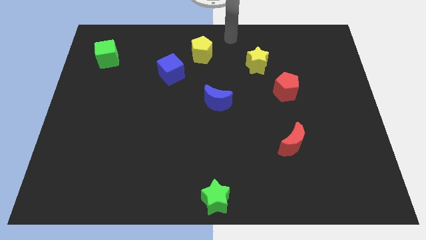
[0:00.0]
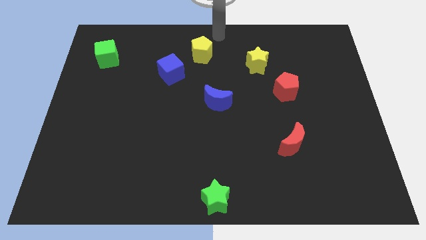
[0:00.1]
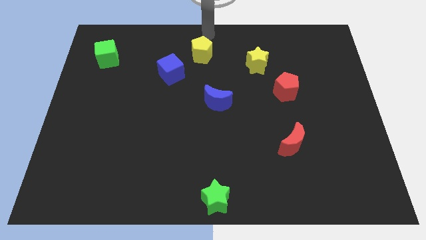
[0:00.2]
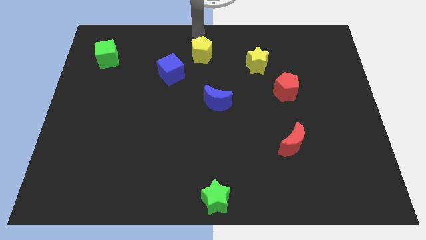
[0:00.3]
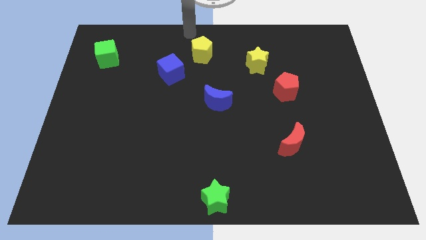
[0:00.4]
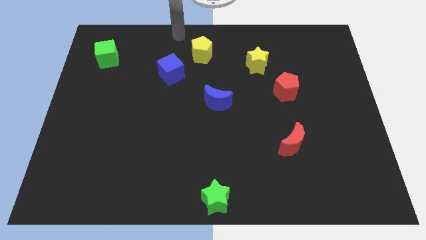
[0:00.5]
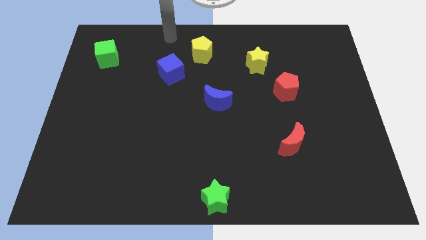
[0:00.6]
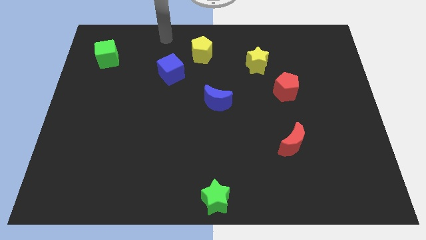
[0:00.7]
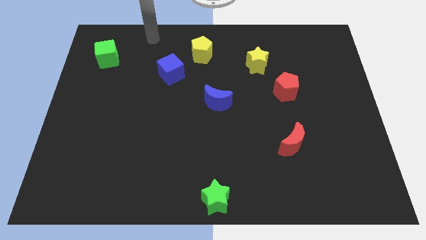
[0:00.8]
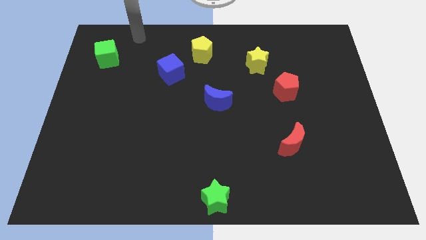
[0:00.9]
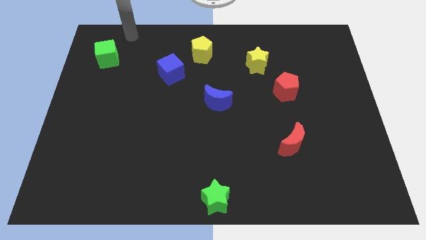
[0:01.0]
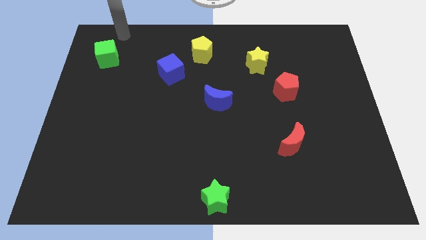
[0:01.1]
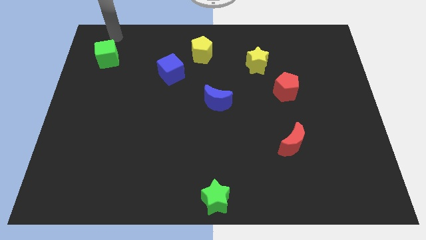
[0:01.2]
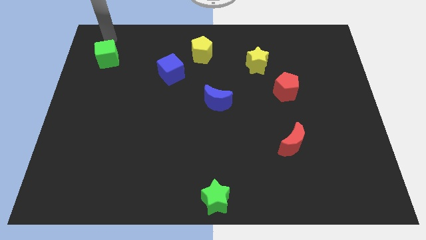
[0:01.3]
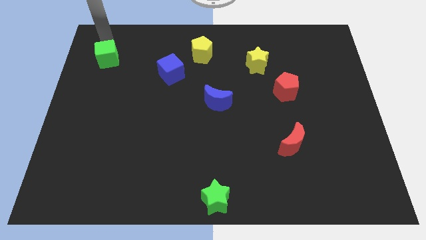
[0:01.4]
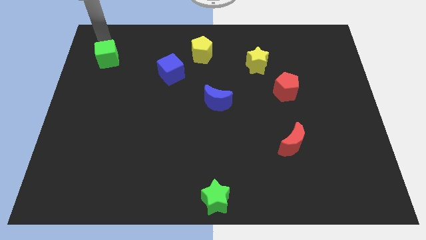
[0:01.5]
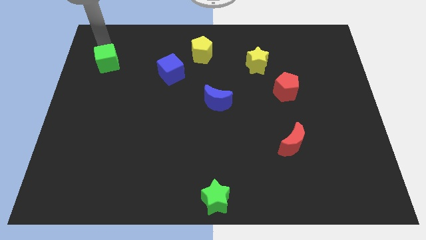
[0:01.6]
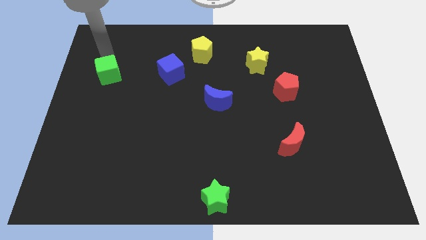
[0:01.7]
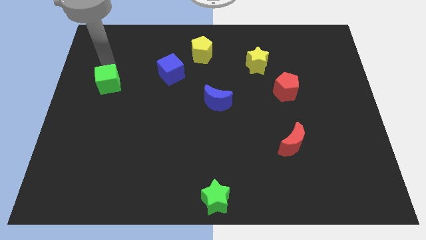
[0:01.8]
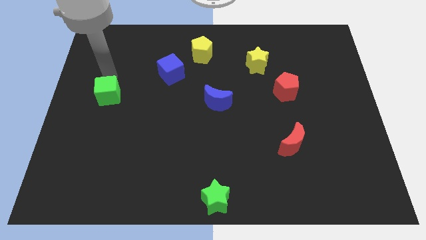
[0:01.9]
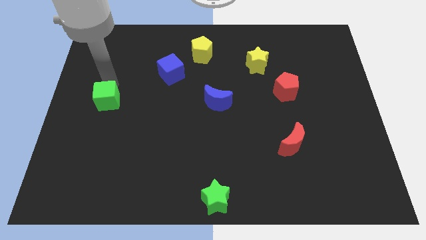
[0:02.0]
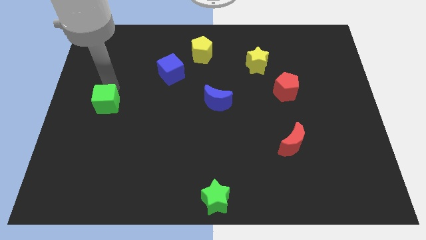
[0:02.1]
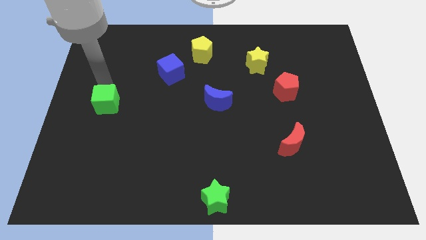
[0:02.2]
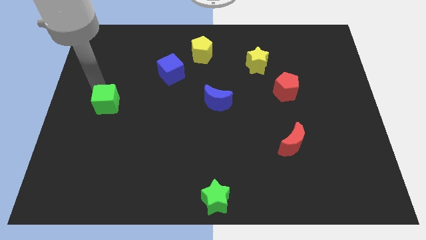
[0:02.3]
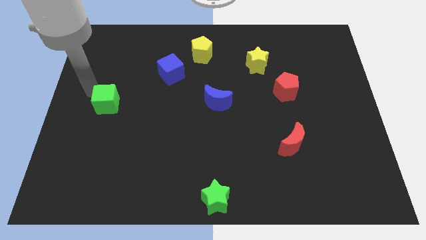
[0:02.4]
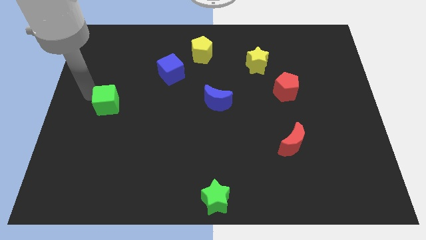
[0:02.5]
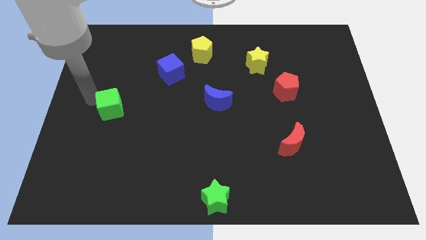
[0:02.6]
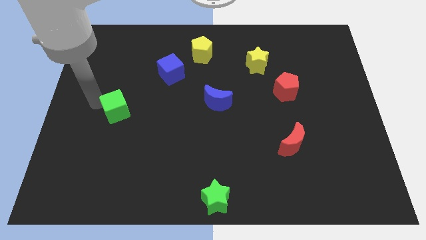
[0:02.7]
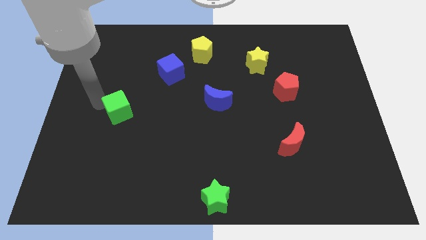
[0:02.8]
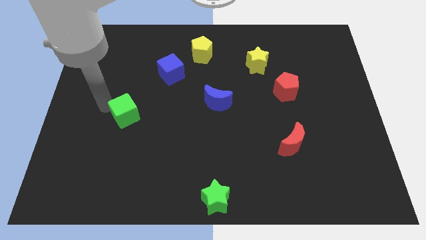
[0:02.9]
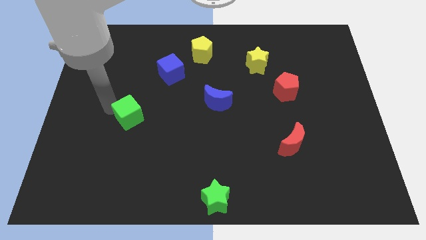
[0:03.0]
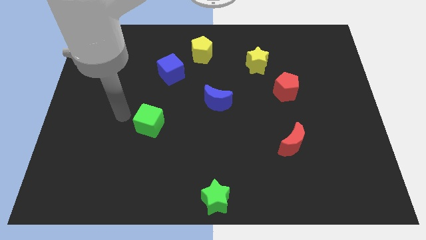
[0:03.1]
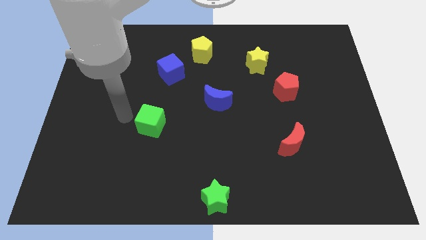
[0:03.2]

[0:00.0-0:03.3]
place the green cube diagonally to the bottom centre of the green star

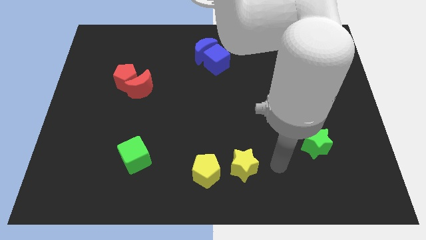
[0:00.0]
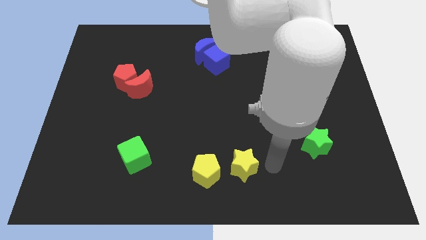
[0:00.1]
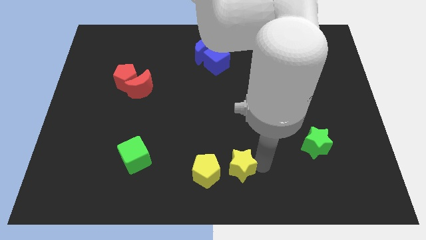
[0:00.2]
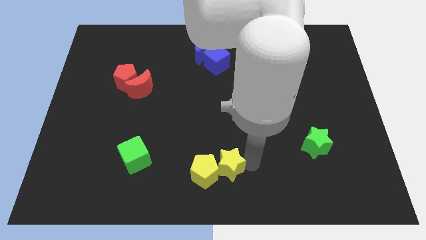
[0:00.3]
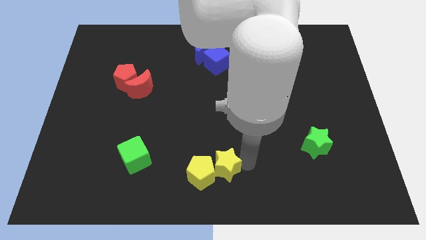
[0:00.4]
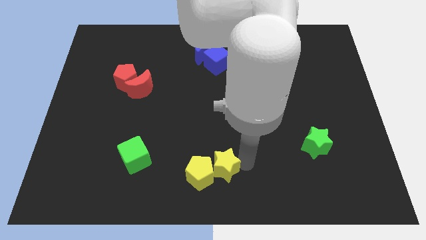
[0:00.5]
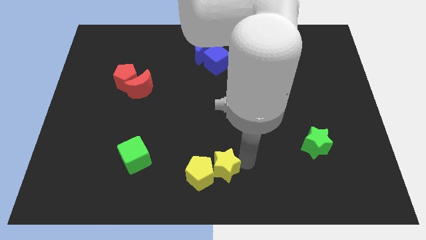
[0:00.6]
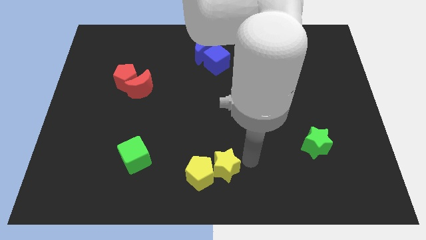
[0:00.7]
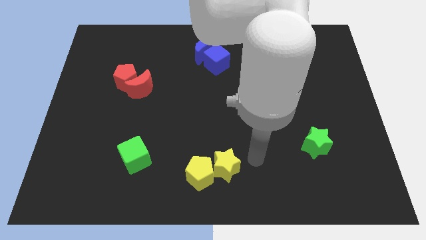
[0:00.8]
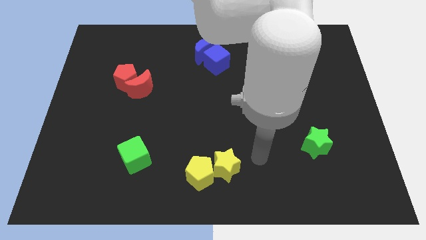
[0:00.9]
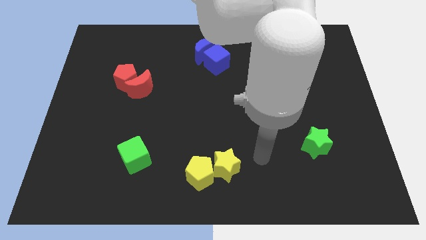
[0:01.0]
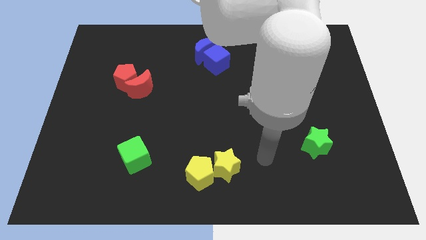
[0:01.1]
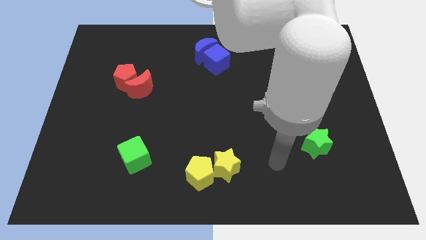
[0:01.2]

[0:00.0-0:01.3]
push the yellow star into the yellow pentagon

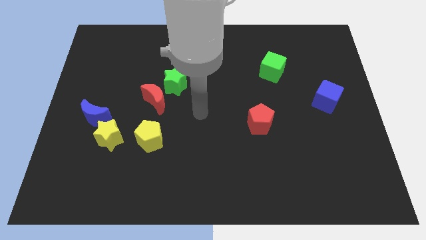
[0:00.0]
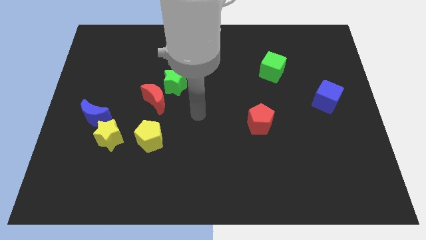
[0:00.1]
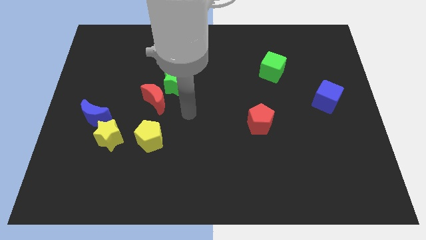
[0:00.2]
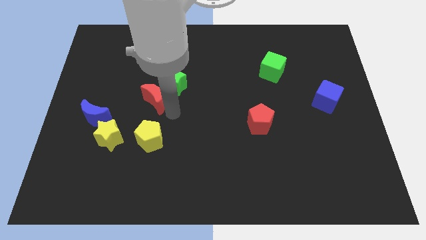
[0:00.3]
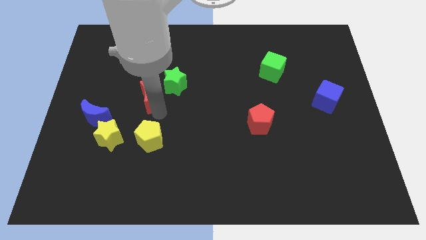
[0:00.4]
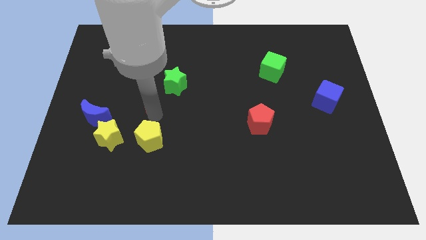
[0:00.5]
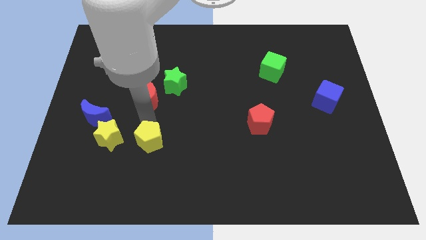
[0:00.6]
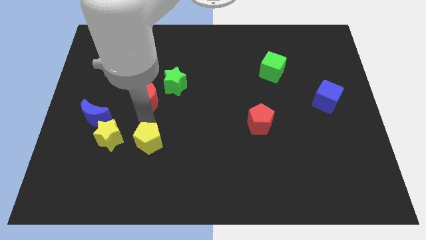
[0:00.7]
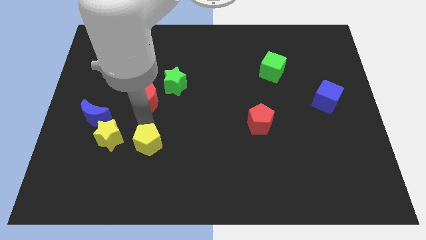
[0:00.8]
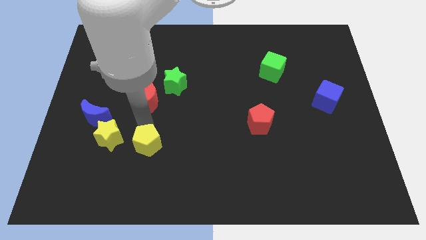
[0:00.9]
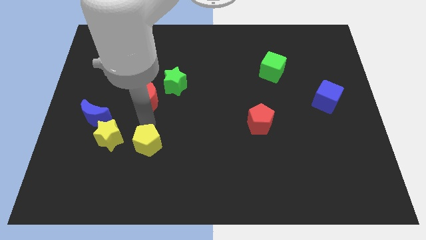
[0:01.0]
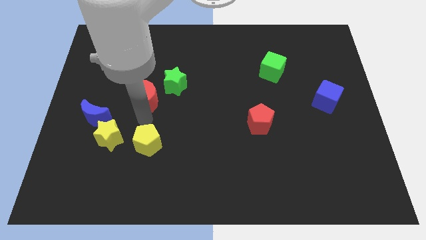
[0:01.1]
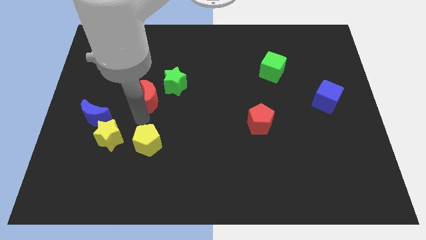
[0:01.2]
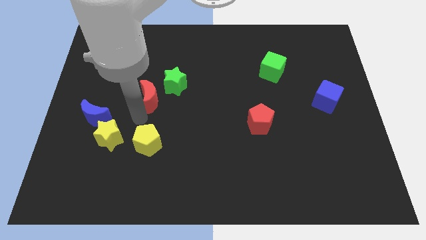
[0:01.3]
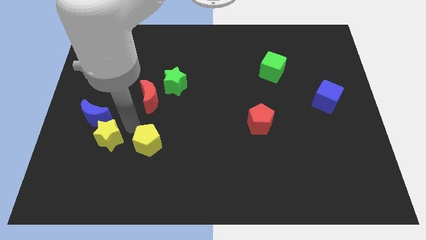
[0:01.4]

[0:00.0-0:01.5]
place the yellow pentagon to the right of the yellow star

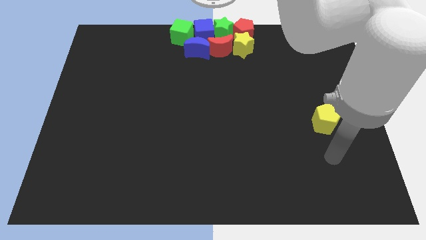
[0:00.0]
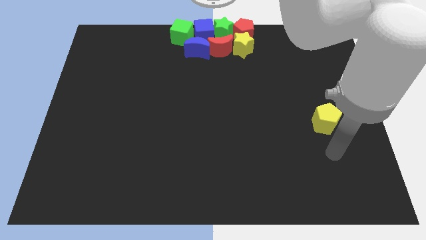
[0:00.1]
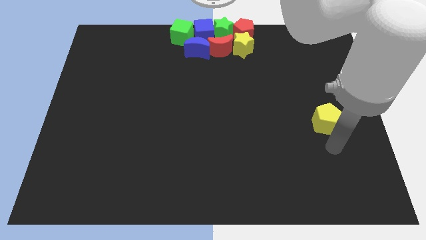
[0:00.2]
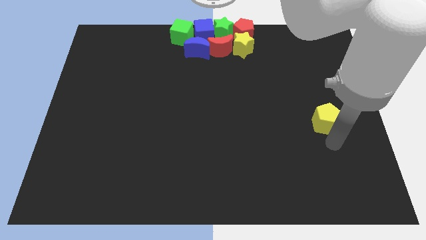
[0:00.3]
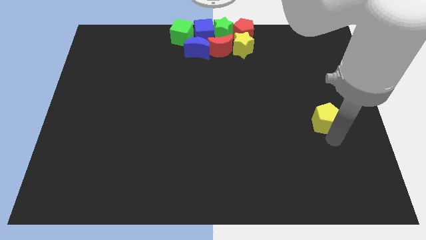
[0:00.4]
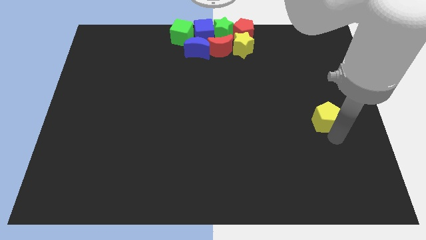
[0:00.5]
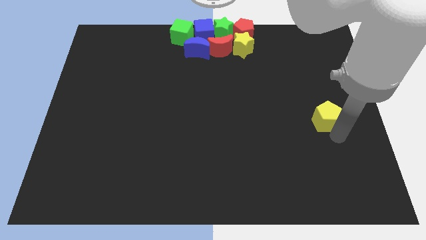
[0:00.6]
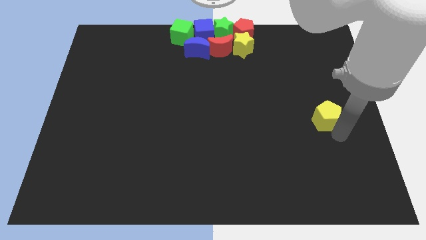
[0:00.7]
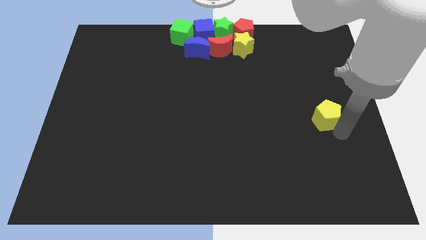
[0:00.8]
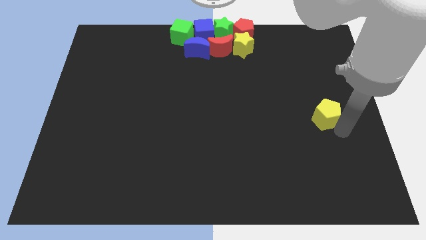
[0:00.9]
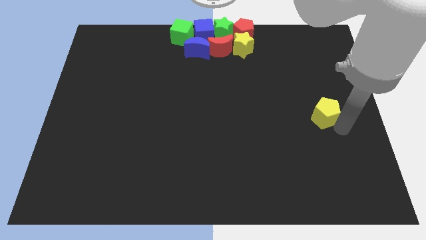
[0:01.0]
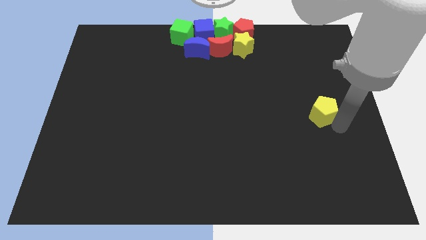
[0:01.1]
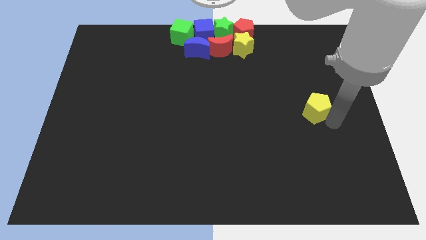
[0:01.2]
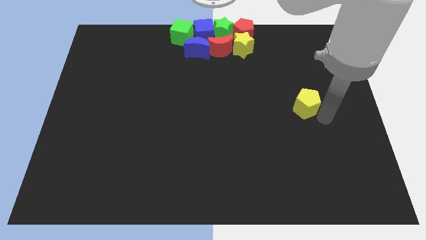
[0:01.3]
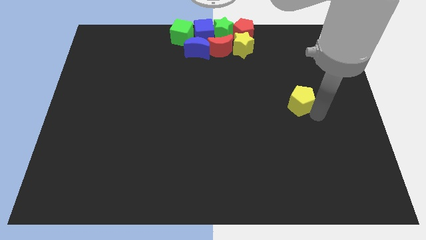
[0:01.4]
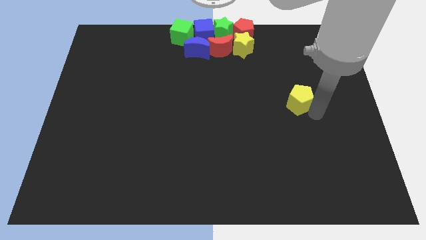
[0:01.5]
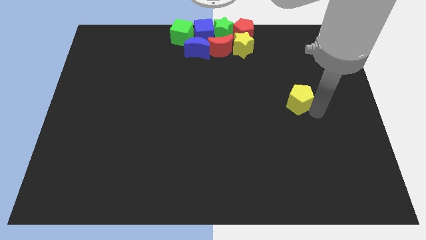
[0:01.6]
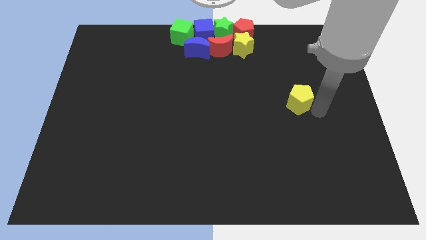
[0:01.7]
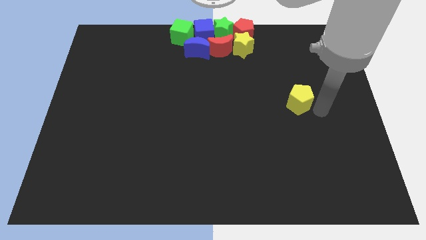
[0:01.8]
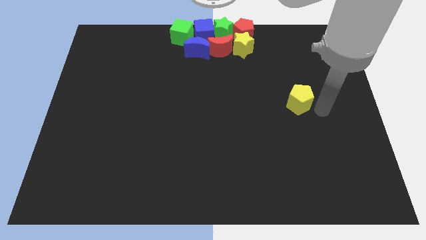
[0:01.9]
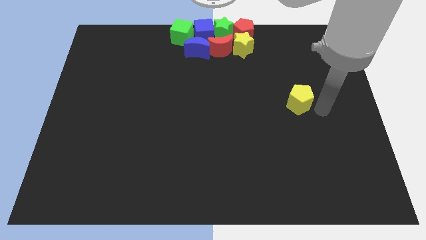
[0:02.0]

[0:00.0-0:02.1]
slightly push yellow pentagon upwards

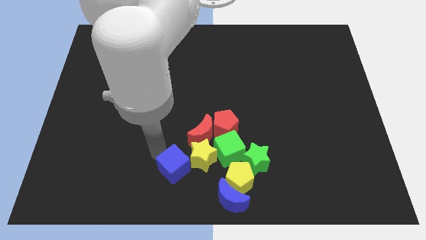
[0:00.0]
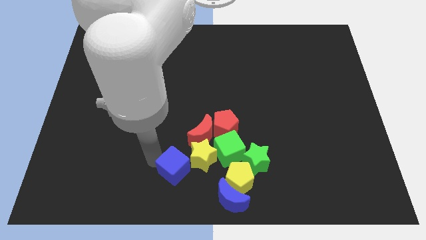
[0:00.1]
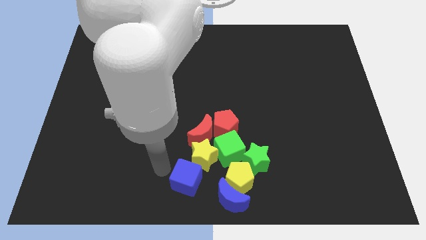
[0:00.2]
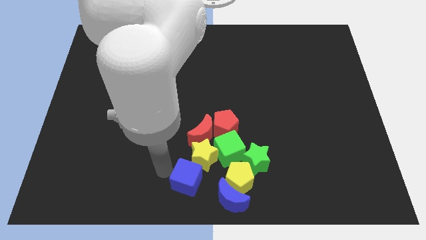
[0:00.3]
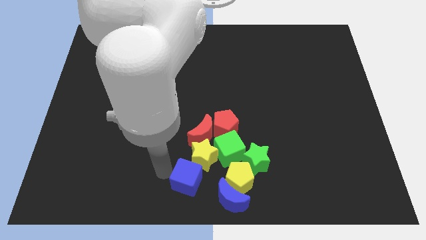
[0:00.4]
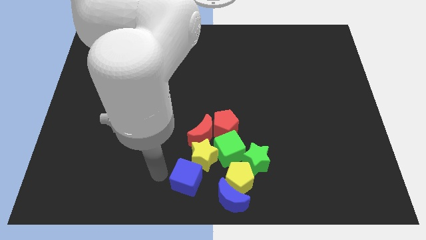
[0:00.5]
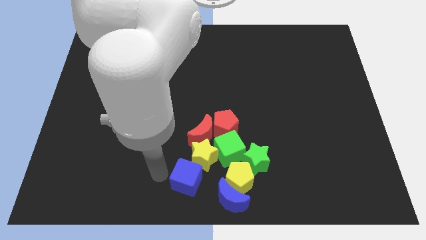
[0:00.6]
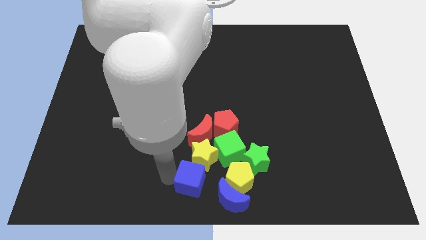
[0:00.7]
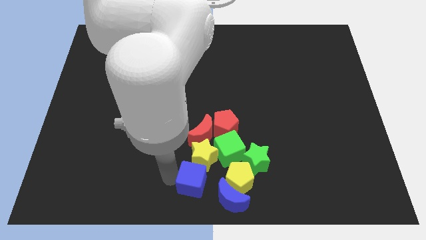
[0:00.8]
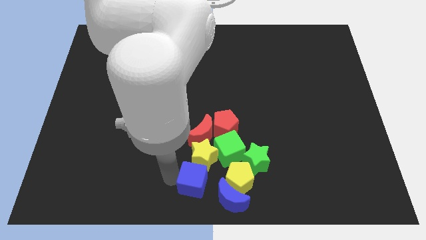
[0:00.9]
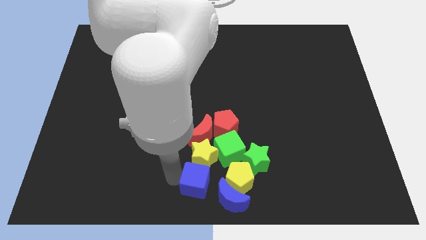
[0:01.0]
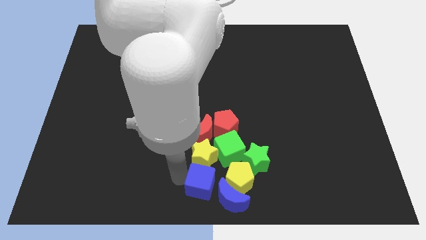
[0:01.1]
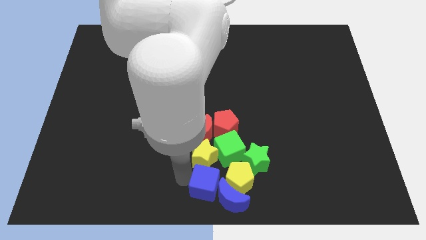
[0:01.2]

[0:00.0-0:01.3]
place the blue cube below the yellow star to form a vertical line
